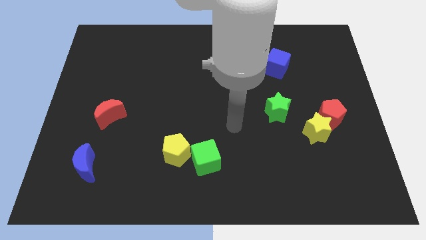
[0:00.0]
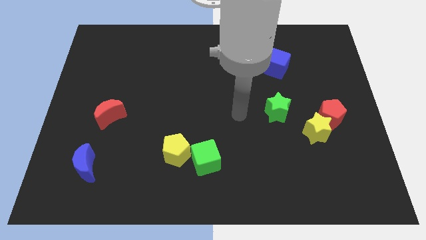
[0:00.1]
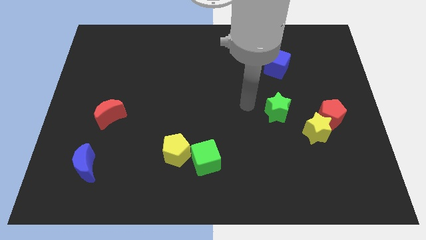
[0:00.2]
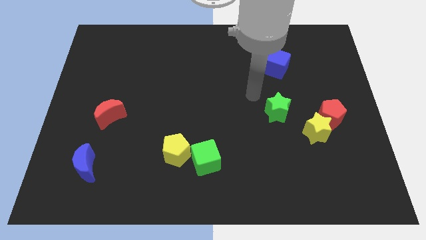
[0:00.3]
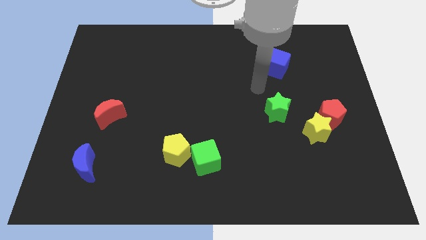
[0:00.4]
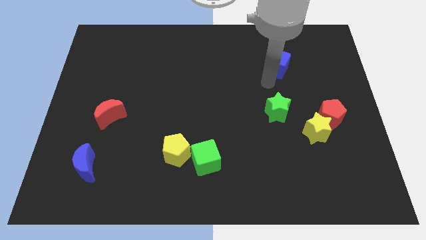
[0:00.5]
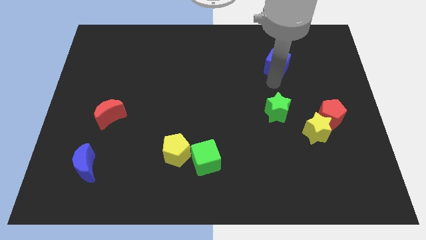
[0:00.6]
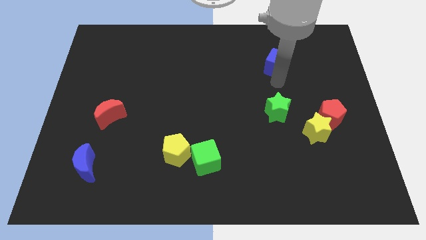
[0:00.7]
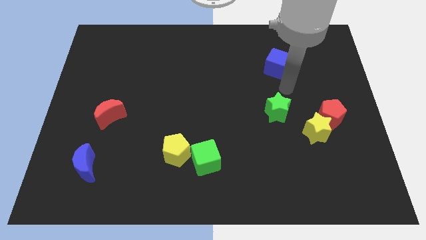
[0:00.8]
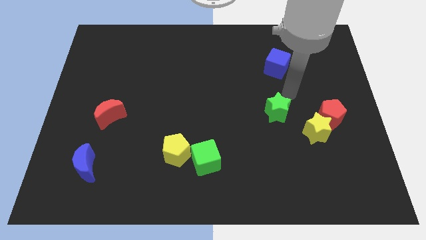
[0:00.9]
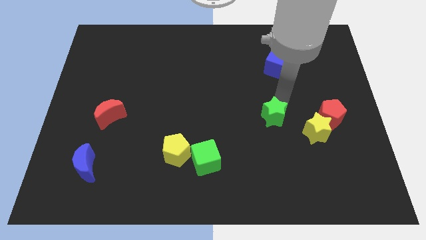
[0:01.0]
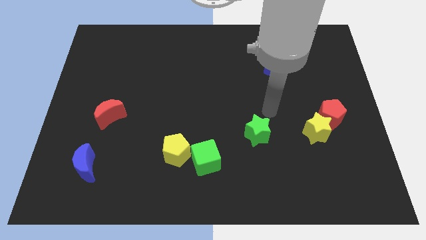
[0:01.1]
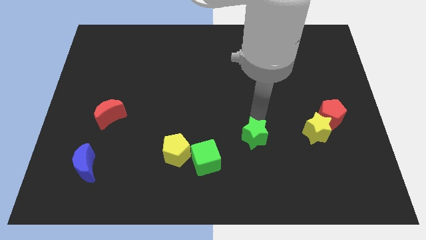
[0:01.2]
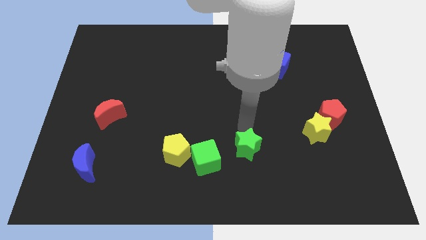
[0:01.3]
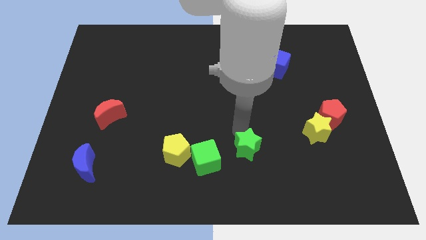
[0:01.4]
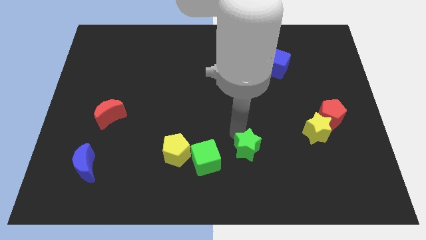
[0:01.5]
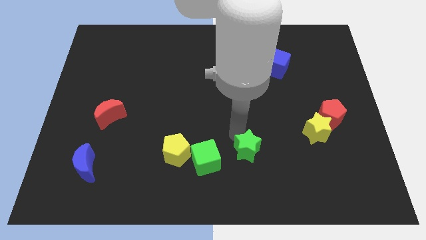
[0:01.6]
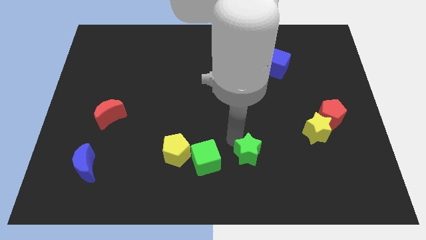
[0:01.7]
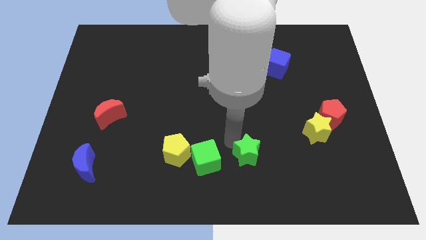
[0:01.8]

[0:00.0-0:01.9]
place the green star to the right of the green cube

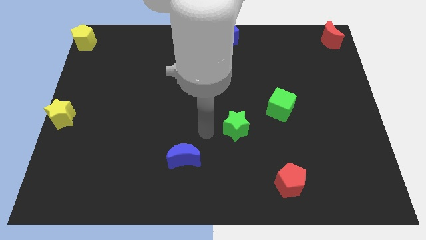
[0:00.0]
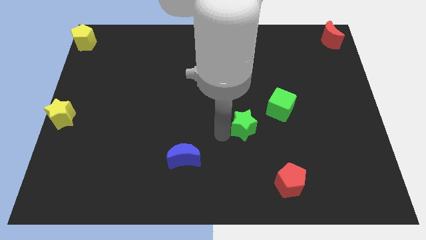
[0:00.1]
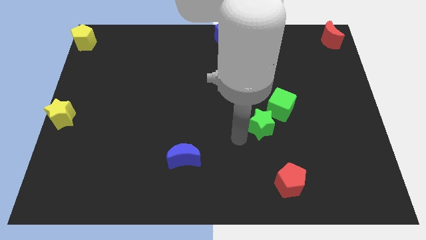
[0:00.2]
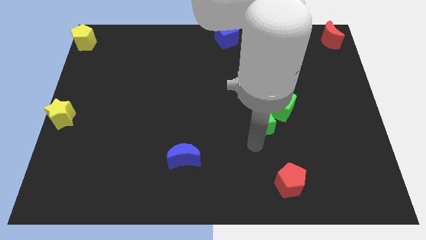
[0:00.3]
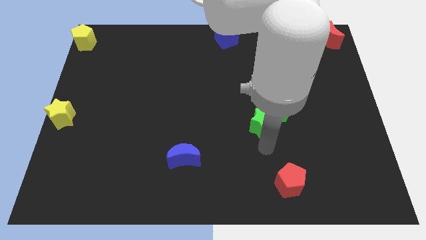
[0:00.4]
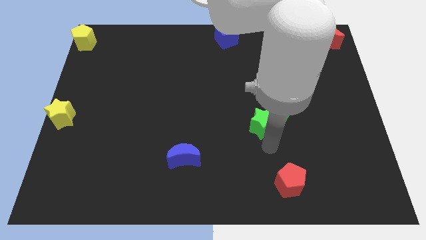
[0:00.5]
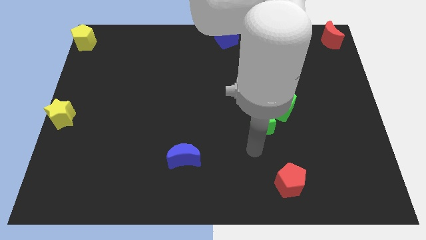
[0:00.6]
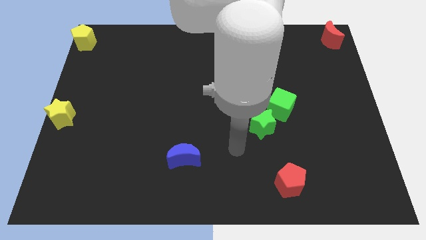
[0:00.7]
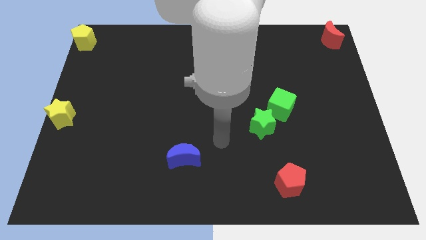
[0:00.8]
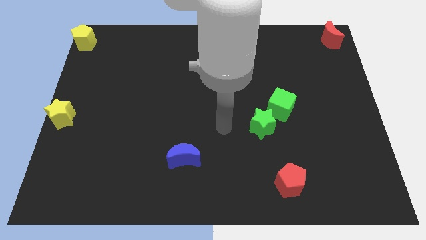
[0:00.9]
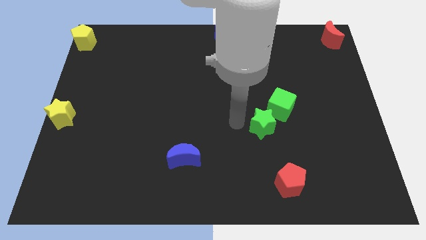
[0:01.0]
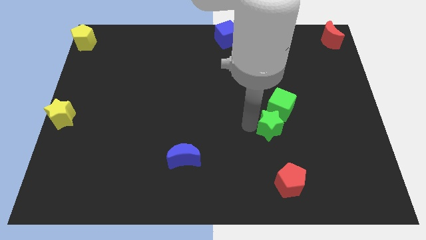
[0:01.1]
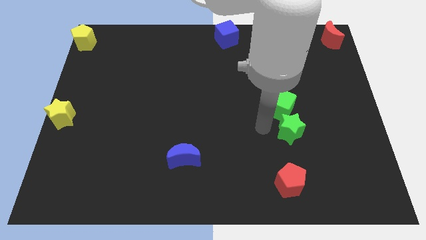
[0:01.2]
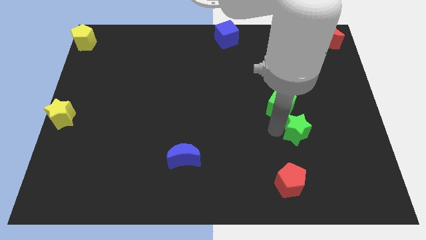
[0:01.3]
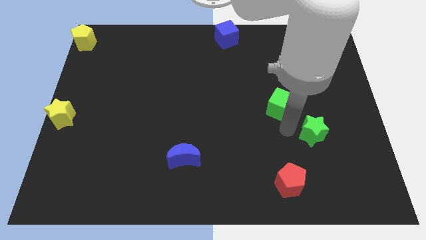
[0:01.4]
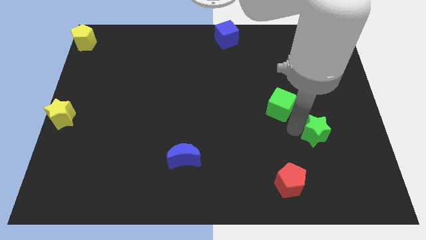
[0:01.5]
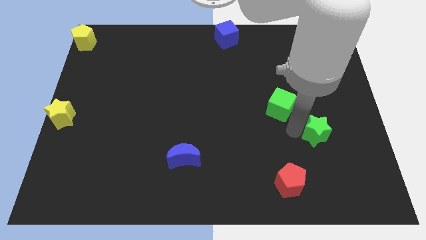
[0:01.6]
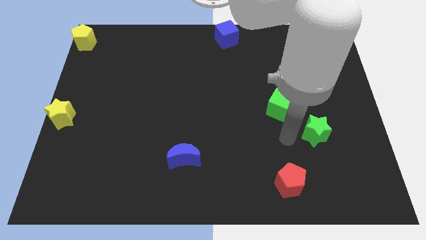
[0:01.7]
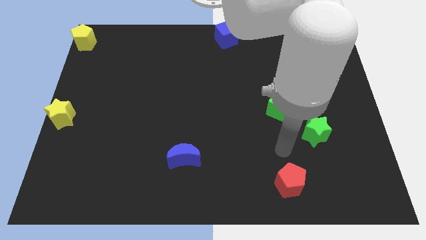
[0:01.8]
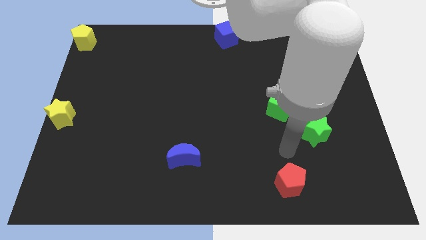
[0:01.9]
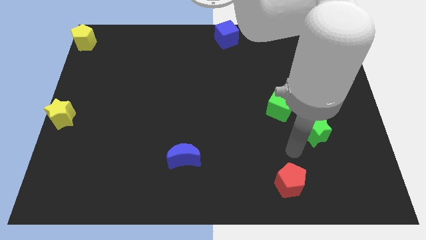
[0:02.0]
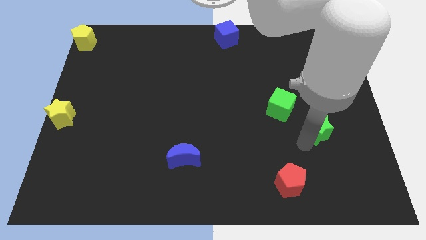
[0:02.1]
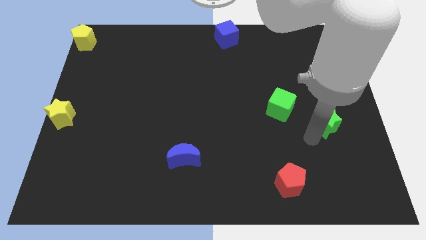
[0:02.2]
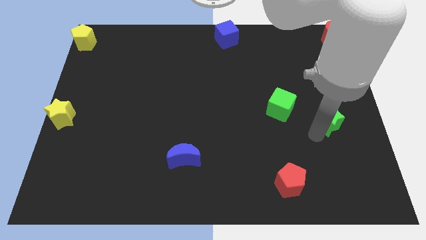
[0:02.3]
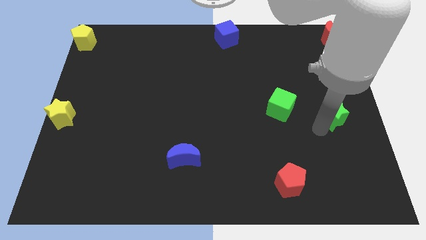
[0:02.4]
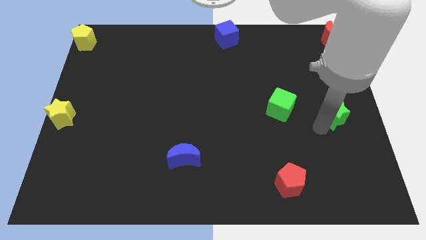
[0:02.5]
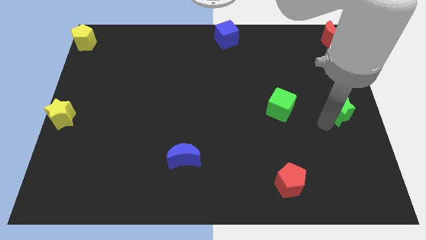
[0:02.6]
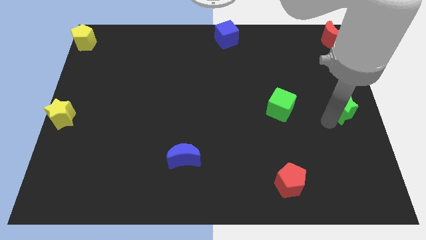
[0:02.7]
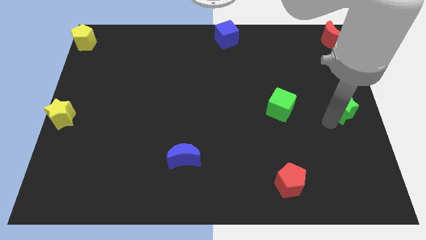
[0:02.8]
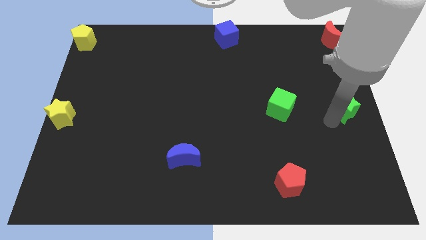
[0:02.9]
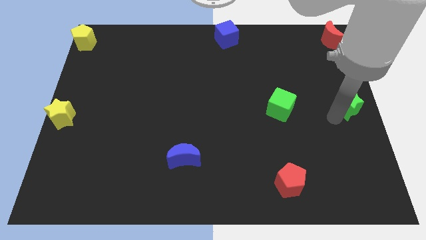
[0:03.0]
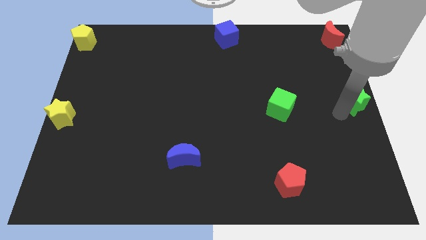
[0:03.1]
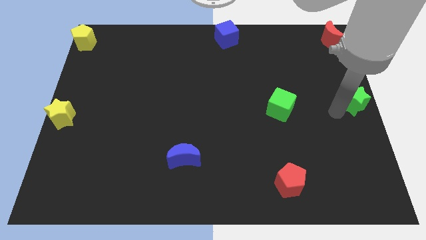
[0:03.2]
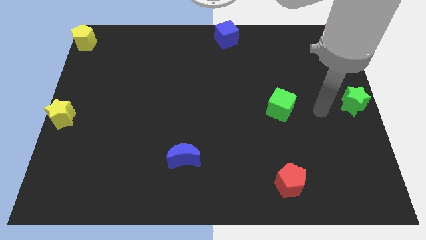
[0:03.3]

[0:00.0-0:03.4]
move the green star at the center right

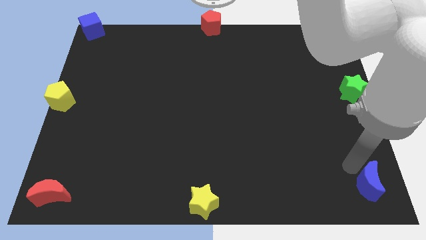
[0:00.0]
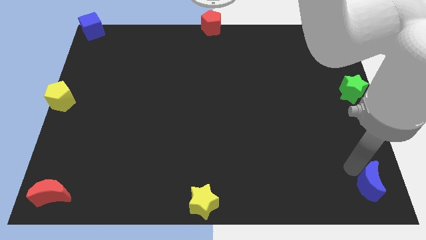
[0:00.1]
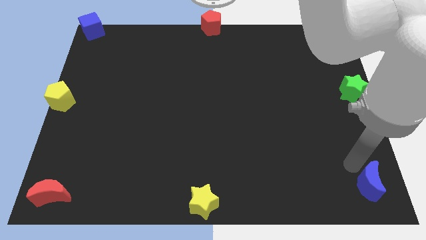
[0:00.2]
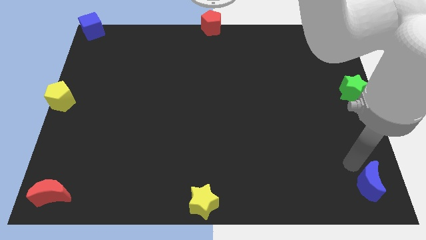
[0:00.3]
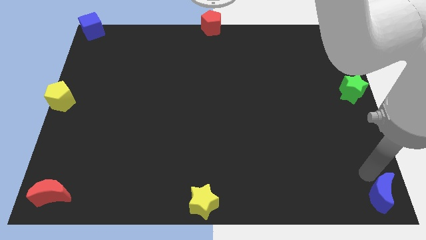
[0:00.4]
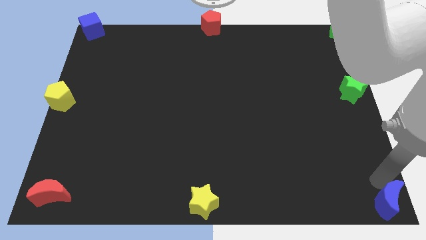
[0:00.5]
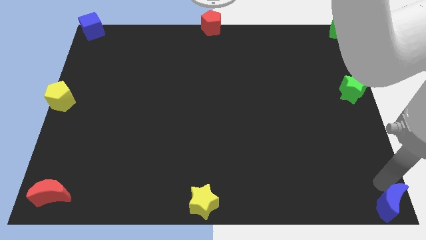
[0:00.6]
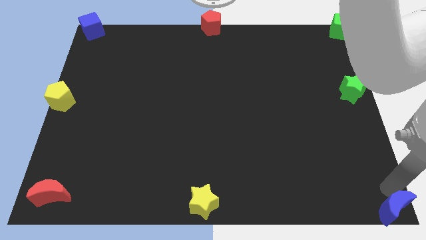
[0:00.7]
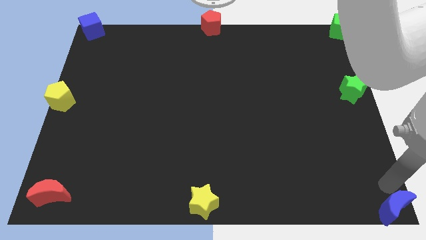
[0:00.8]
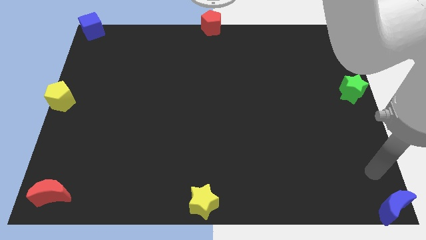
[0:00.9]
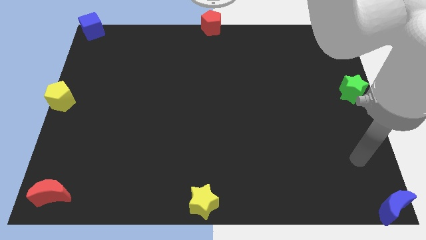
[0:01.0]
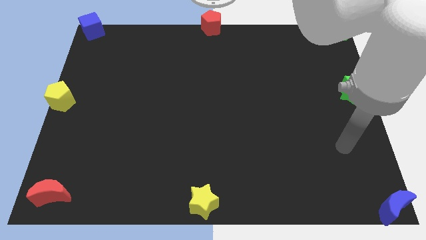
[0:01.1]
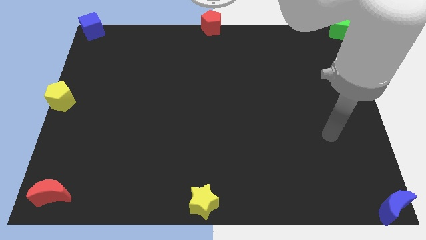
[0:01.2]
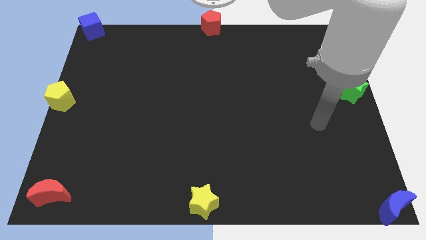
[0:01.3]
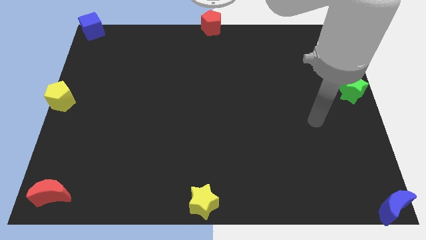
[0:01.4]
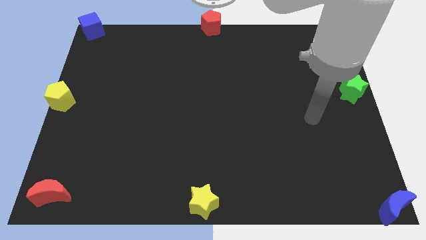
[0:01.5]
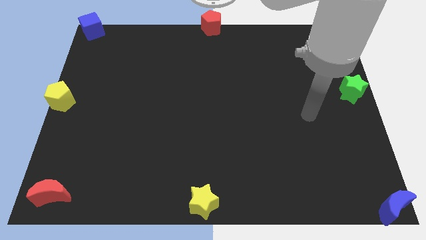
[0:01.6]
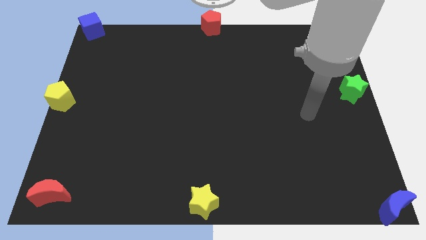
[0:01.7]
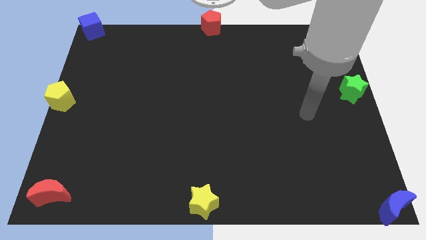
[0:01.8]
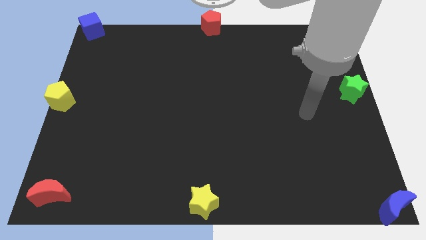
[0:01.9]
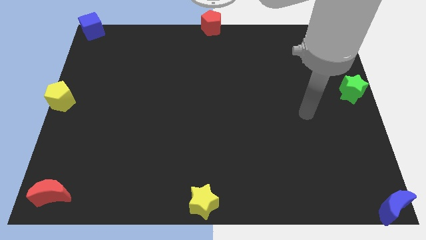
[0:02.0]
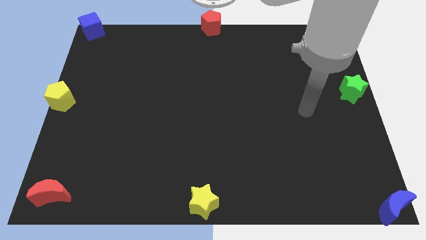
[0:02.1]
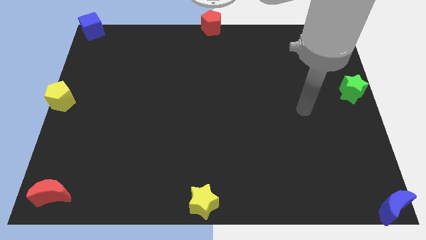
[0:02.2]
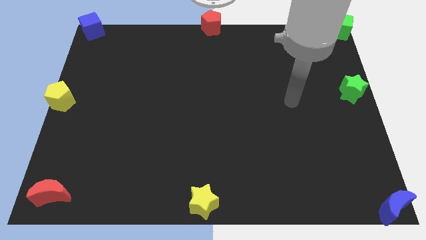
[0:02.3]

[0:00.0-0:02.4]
place the blue moon to bottom right corner of the board

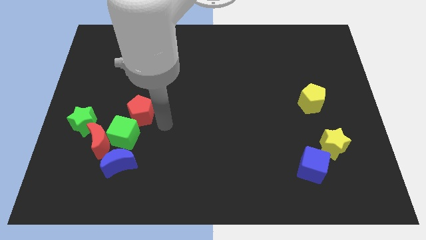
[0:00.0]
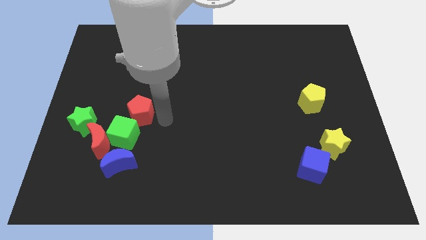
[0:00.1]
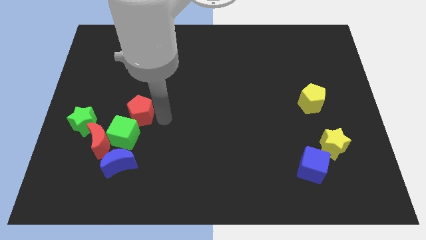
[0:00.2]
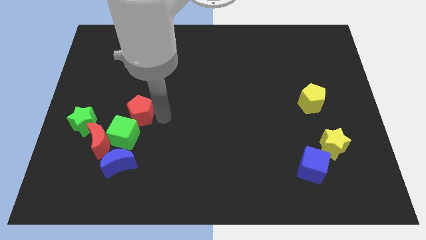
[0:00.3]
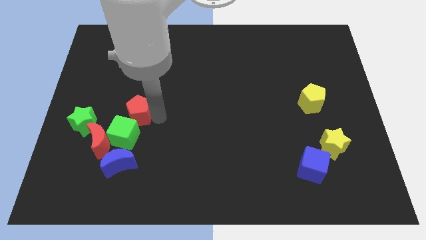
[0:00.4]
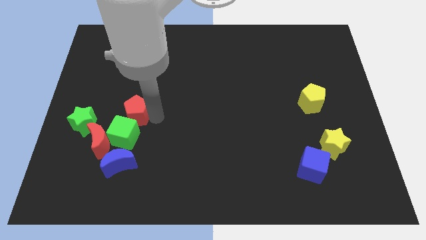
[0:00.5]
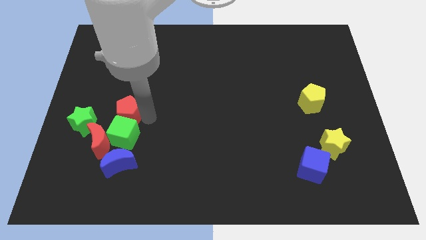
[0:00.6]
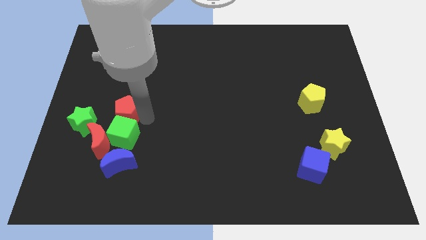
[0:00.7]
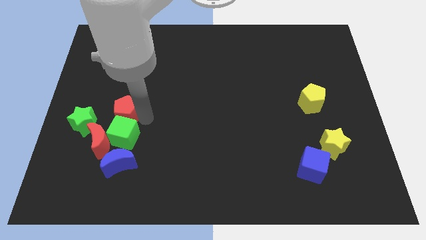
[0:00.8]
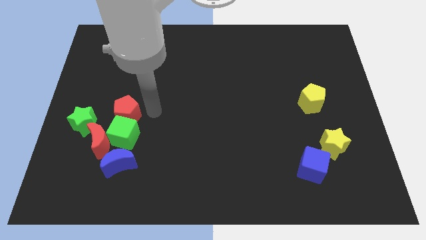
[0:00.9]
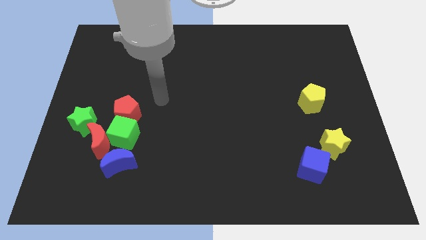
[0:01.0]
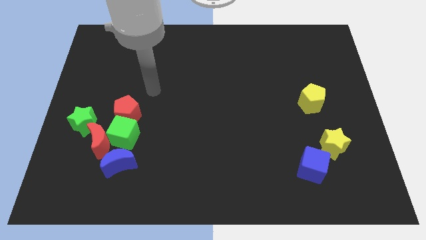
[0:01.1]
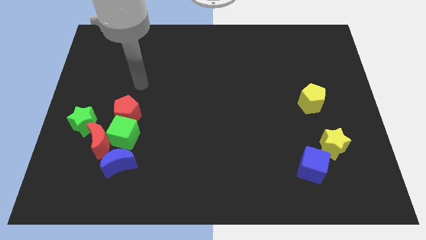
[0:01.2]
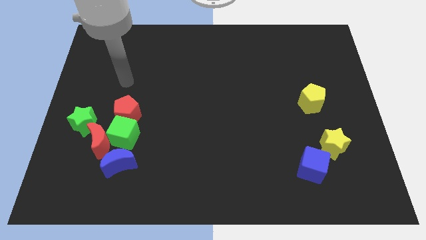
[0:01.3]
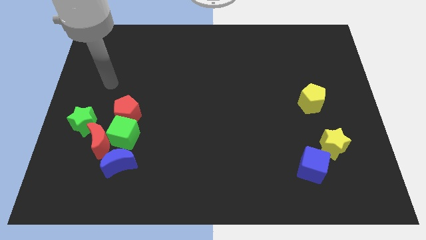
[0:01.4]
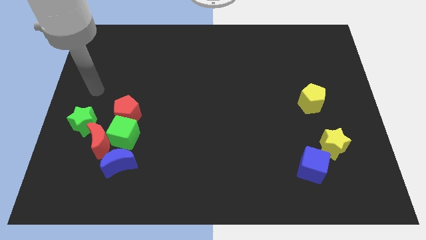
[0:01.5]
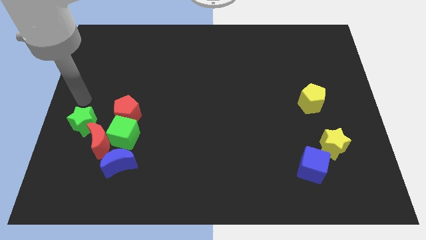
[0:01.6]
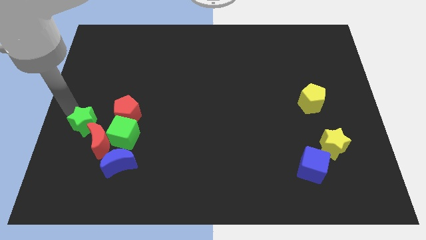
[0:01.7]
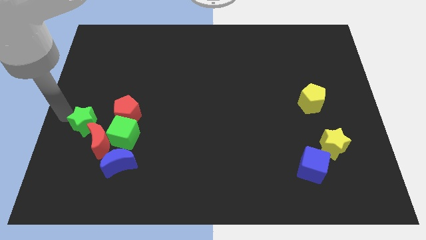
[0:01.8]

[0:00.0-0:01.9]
place the red pentagon above the green cube
